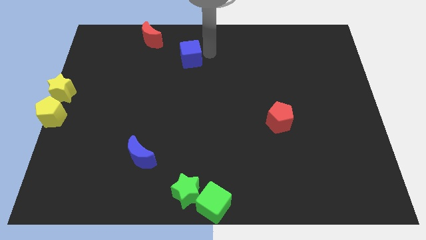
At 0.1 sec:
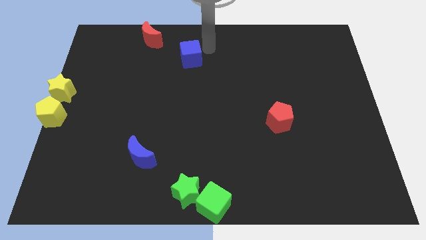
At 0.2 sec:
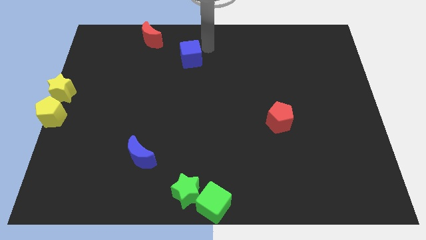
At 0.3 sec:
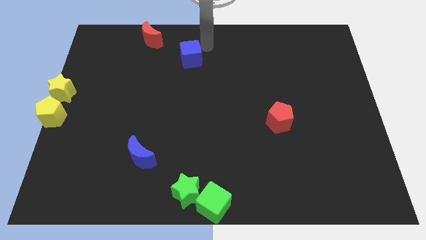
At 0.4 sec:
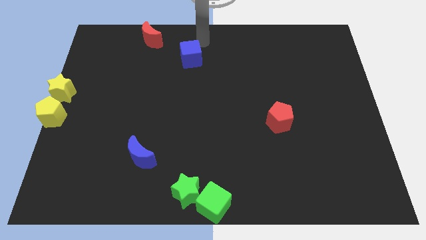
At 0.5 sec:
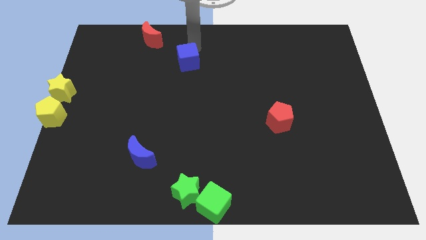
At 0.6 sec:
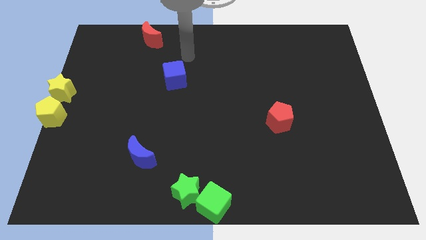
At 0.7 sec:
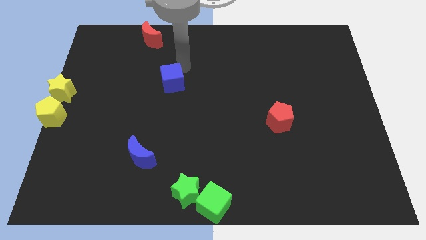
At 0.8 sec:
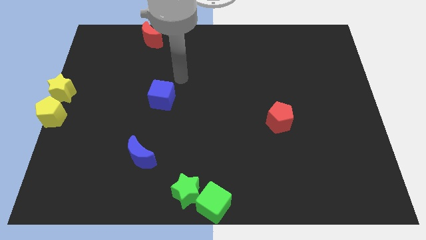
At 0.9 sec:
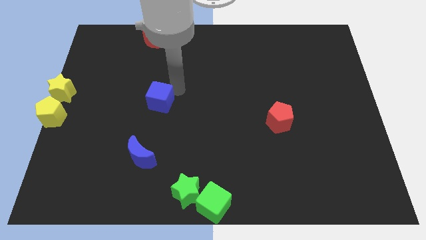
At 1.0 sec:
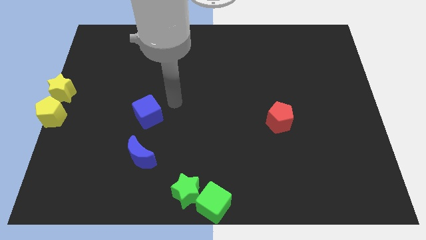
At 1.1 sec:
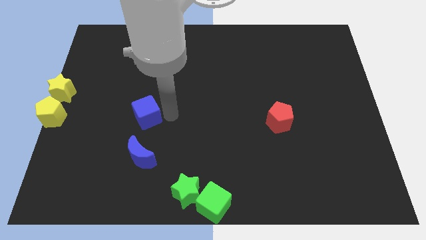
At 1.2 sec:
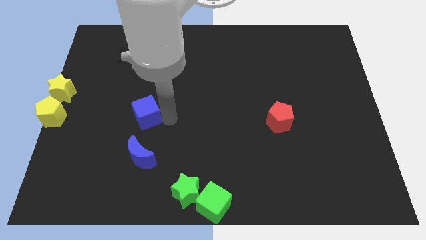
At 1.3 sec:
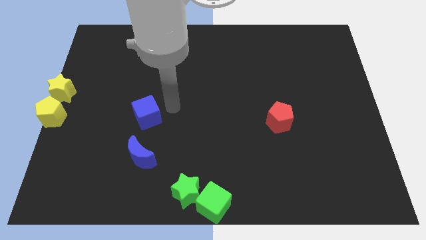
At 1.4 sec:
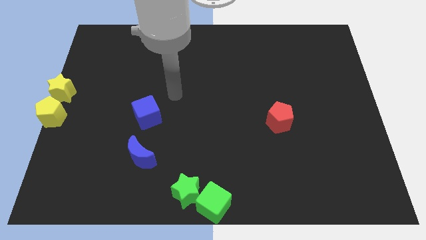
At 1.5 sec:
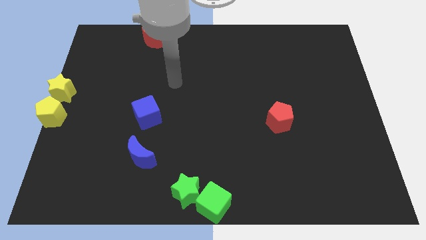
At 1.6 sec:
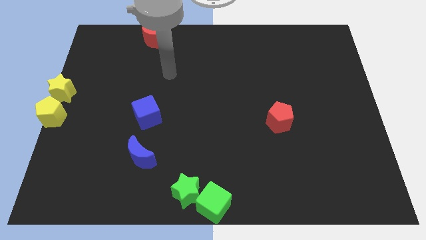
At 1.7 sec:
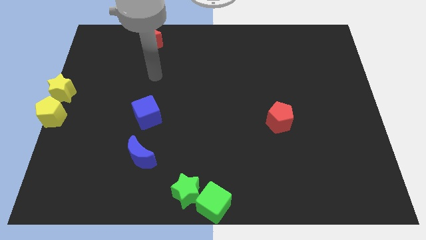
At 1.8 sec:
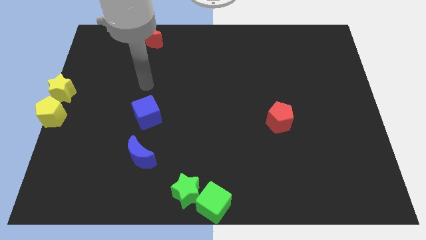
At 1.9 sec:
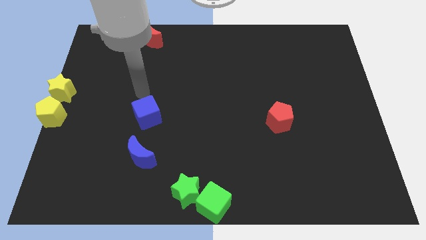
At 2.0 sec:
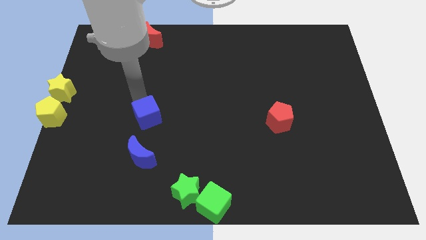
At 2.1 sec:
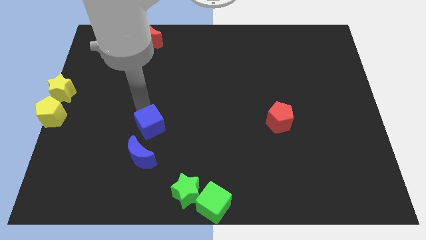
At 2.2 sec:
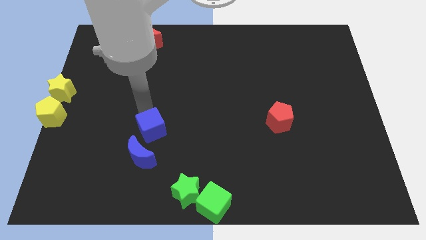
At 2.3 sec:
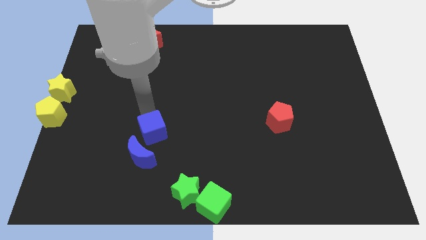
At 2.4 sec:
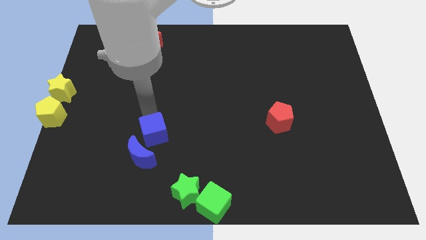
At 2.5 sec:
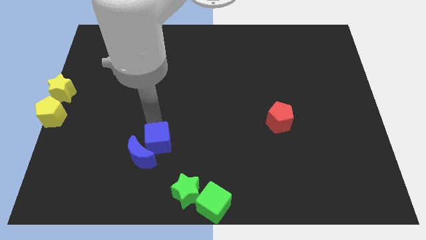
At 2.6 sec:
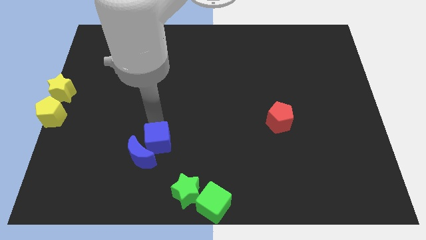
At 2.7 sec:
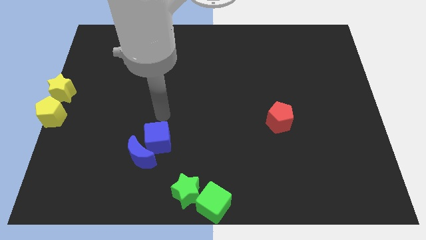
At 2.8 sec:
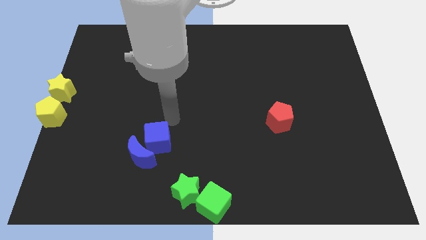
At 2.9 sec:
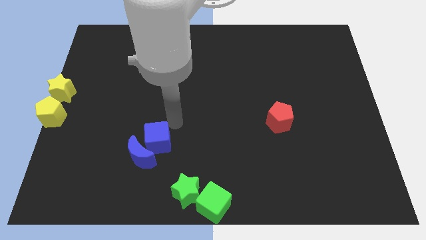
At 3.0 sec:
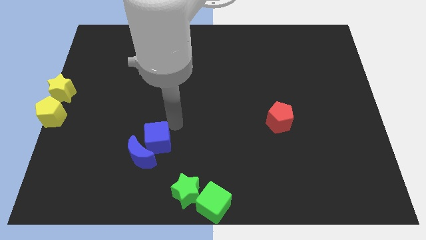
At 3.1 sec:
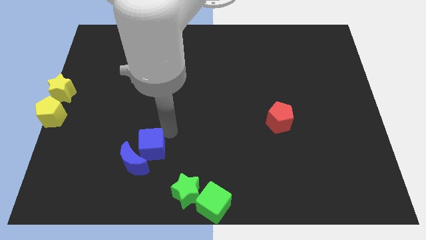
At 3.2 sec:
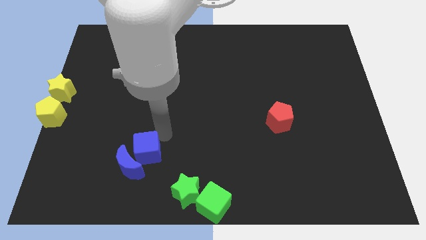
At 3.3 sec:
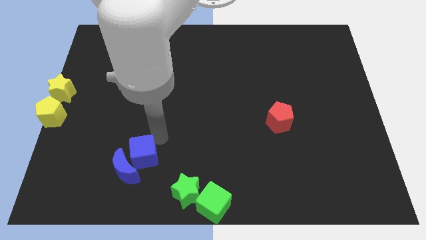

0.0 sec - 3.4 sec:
push the blue cube into the blue moon

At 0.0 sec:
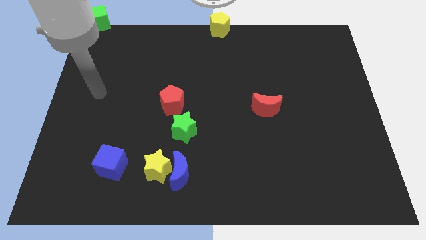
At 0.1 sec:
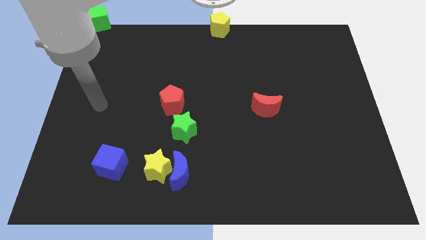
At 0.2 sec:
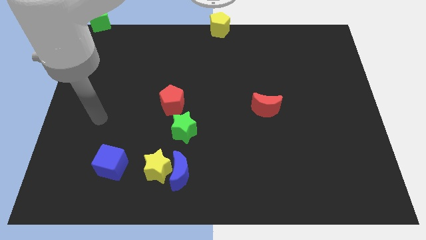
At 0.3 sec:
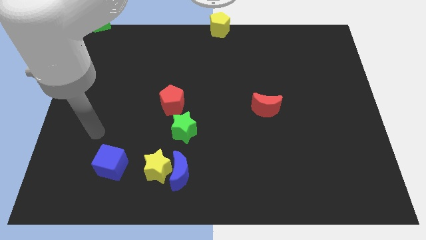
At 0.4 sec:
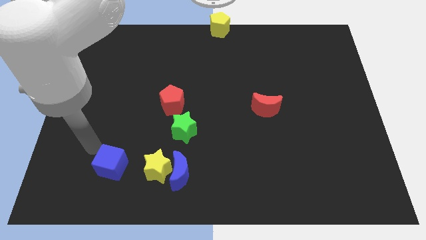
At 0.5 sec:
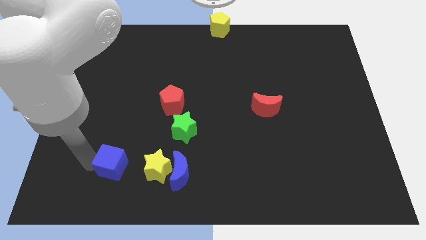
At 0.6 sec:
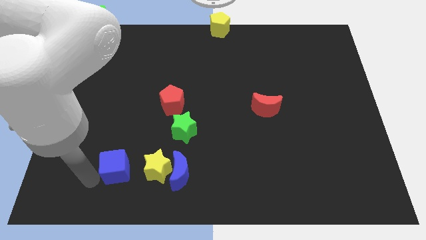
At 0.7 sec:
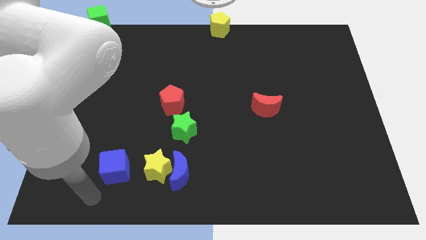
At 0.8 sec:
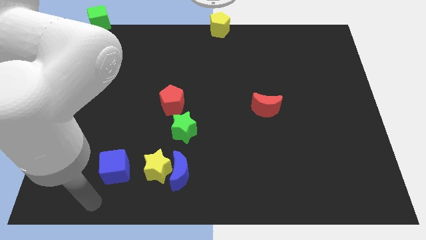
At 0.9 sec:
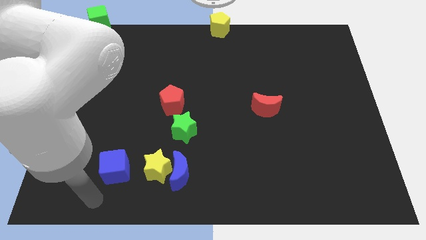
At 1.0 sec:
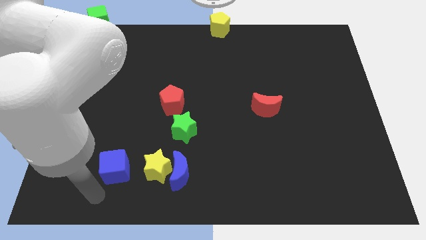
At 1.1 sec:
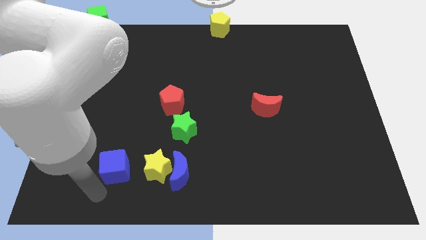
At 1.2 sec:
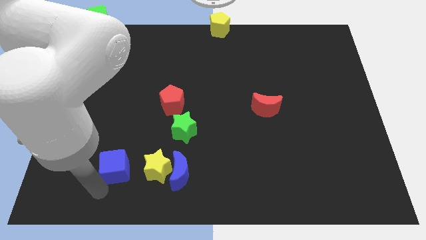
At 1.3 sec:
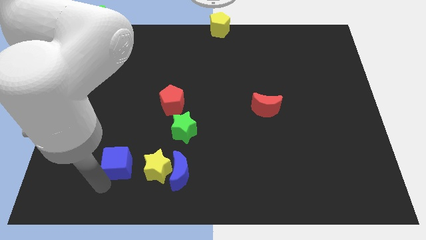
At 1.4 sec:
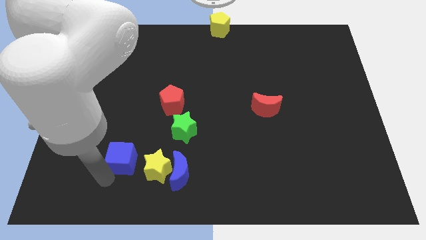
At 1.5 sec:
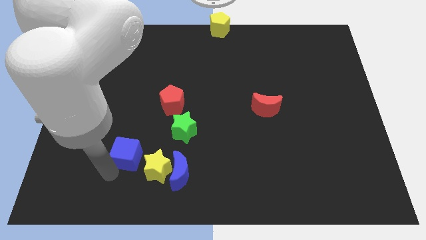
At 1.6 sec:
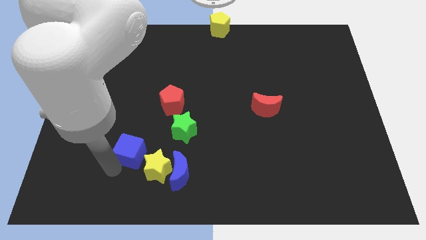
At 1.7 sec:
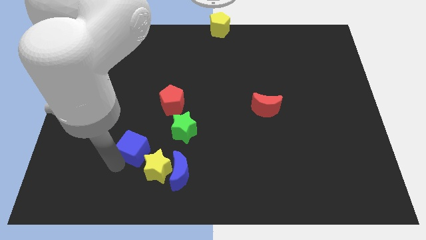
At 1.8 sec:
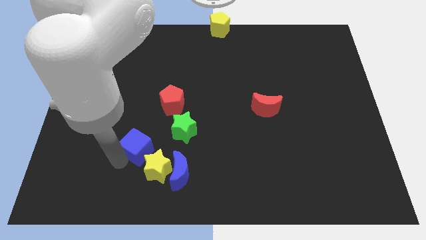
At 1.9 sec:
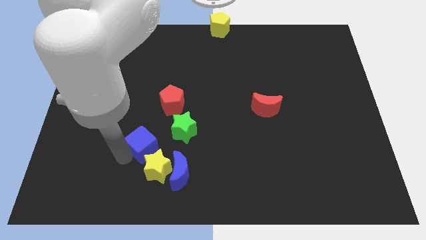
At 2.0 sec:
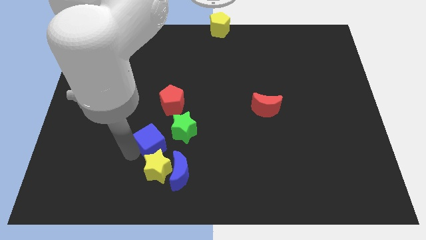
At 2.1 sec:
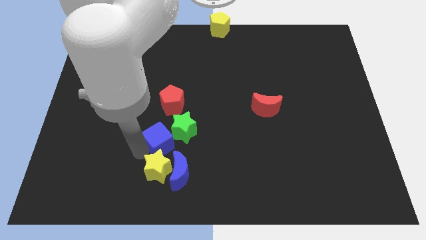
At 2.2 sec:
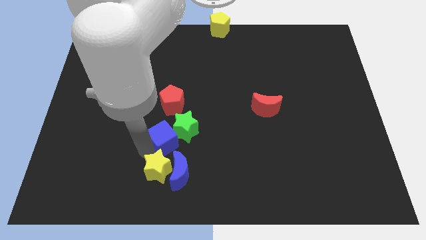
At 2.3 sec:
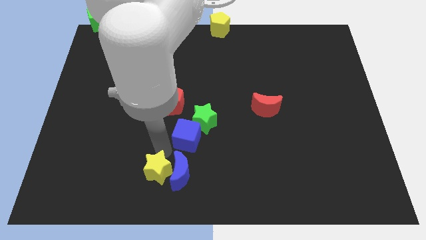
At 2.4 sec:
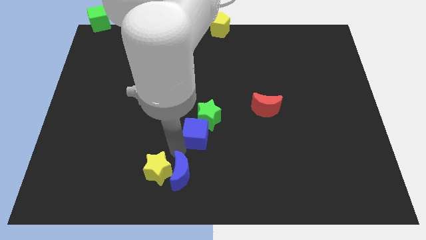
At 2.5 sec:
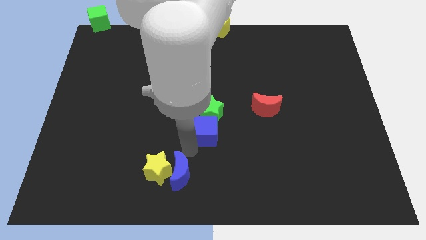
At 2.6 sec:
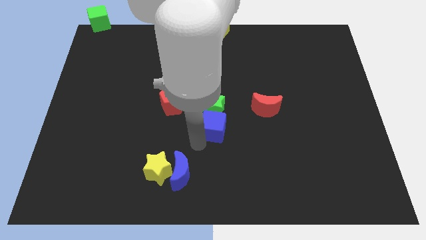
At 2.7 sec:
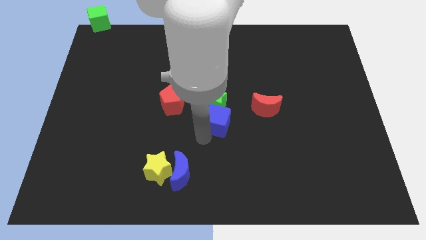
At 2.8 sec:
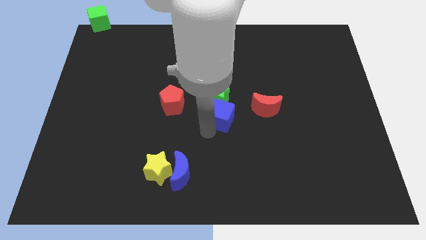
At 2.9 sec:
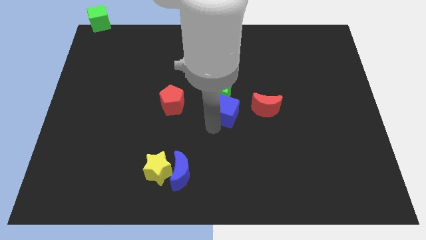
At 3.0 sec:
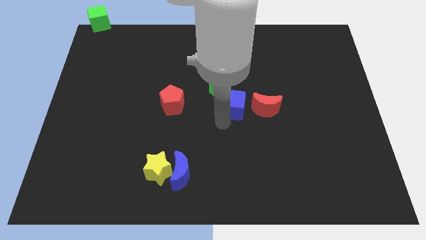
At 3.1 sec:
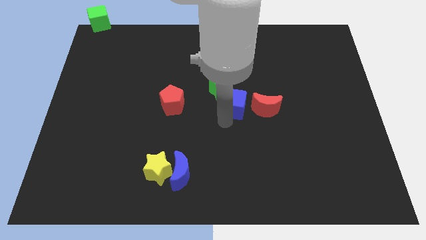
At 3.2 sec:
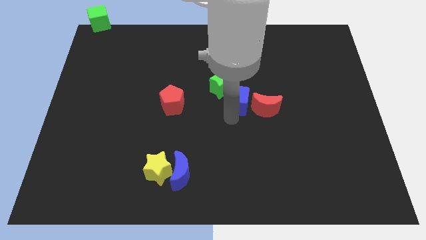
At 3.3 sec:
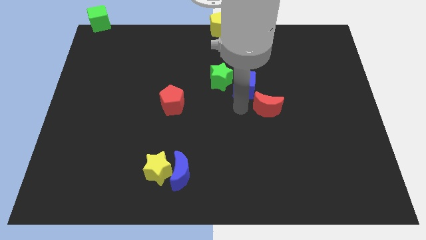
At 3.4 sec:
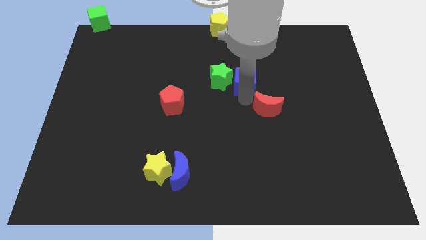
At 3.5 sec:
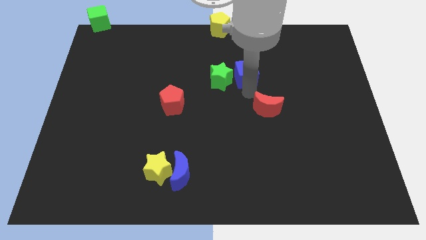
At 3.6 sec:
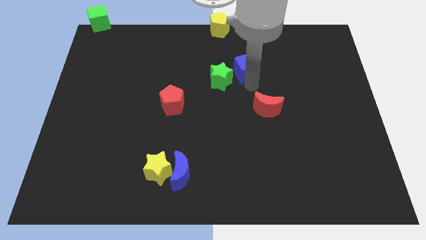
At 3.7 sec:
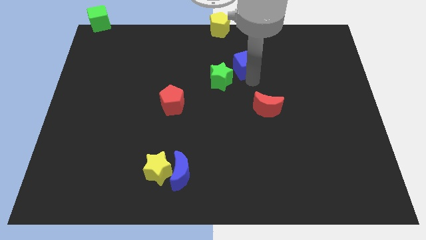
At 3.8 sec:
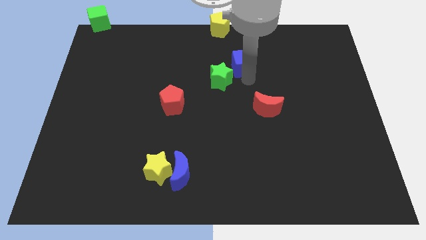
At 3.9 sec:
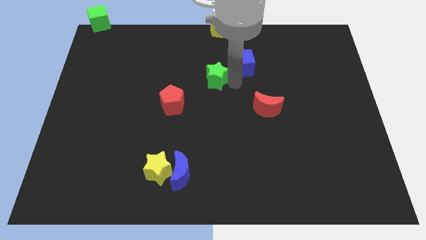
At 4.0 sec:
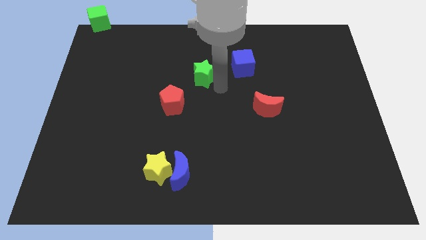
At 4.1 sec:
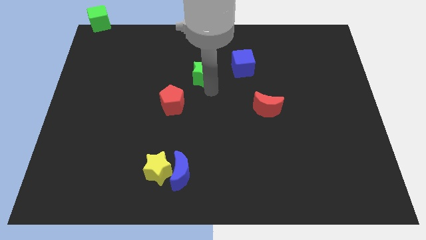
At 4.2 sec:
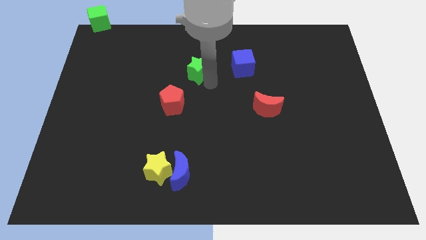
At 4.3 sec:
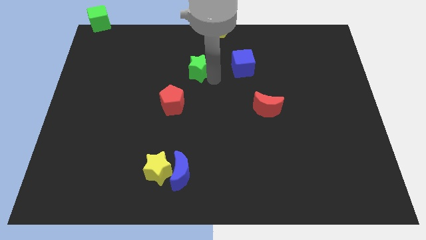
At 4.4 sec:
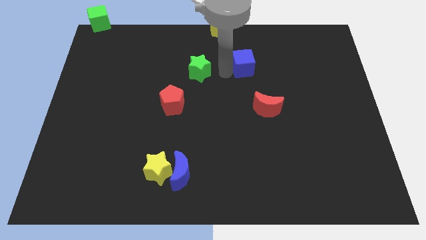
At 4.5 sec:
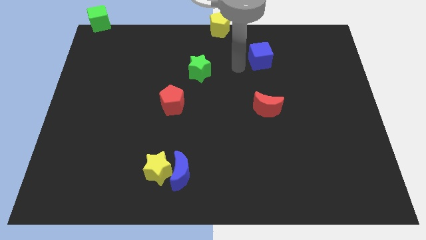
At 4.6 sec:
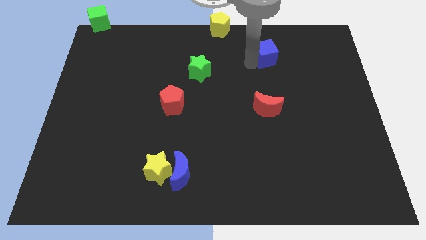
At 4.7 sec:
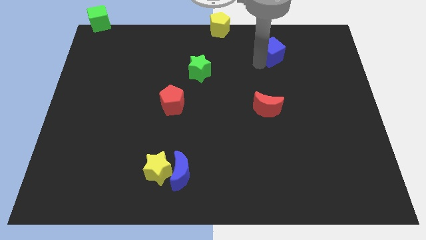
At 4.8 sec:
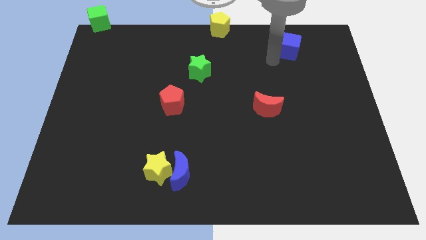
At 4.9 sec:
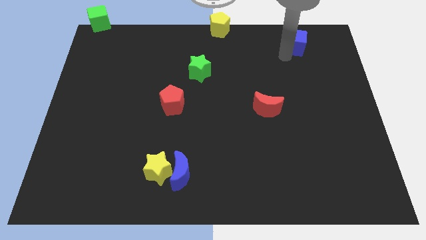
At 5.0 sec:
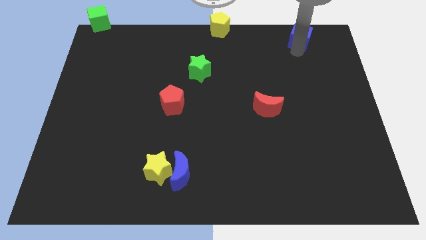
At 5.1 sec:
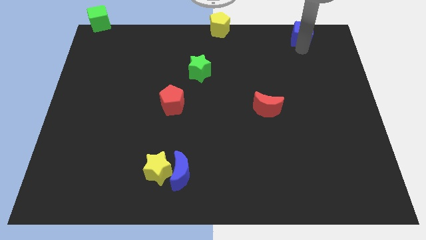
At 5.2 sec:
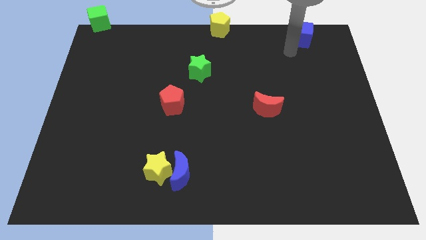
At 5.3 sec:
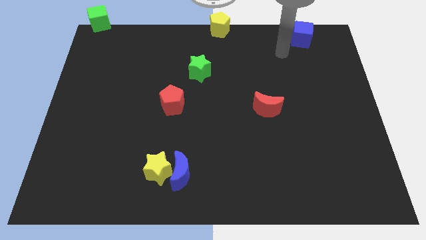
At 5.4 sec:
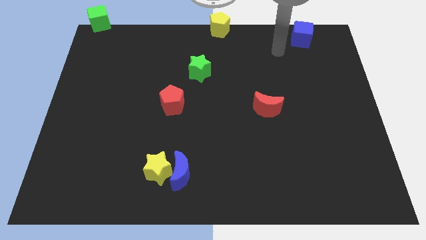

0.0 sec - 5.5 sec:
move the blue cube towards top right
